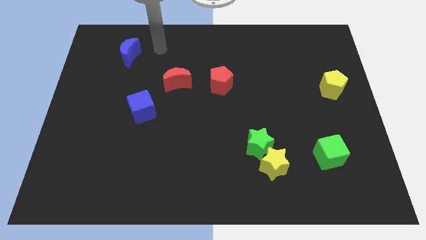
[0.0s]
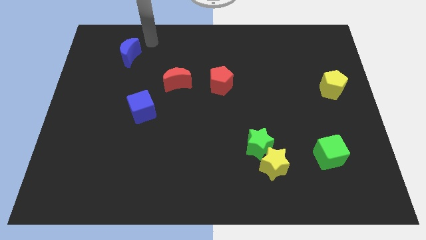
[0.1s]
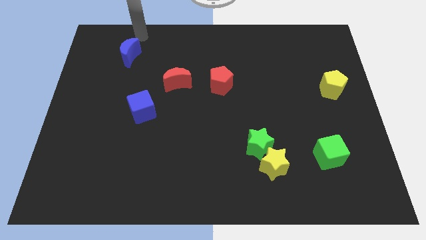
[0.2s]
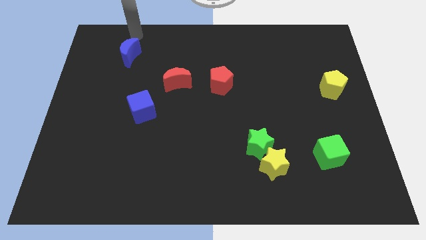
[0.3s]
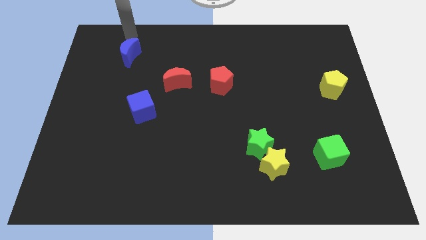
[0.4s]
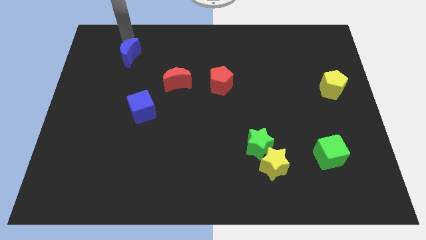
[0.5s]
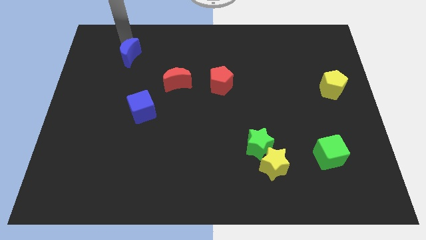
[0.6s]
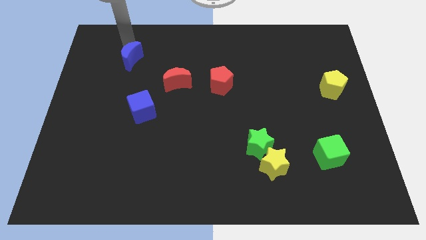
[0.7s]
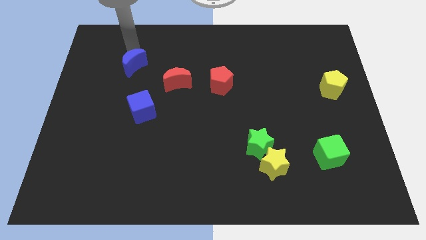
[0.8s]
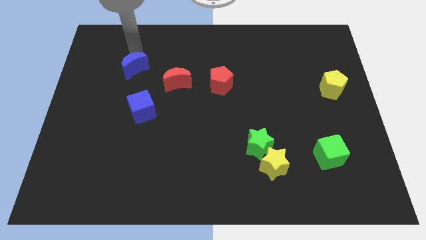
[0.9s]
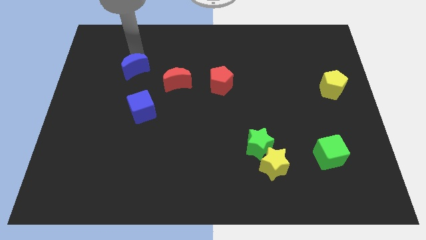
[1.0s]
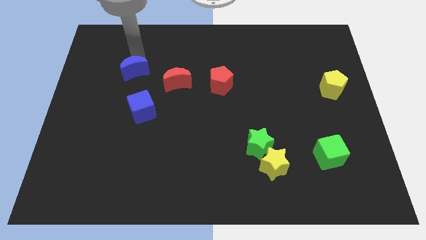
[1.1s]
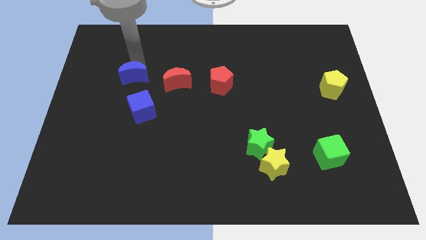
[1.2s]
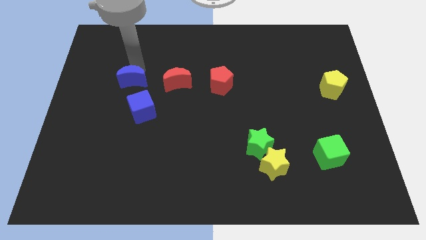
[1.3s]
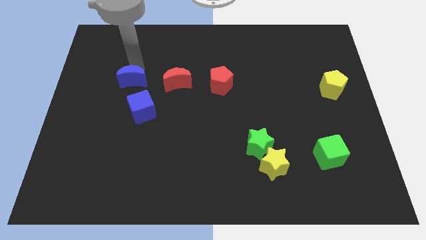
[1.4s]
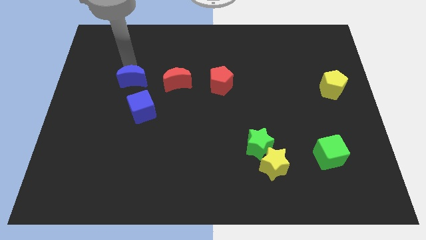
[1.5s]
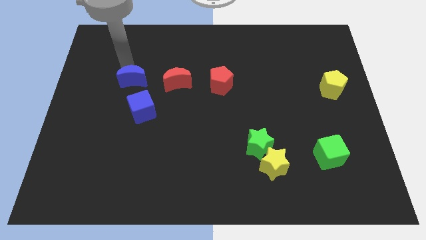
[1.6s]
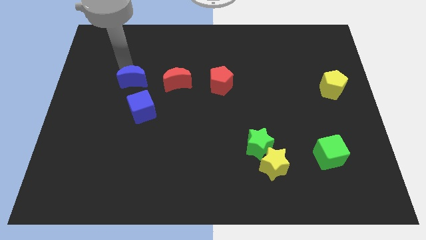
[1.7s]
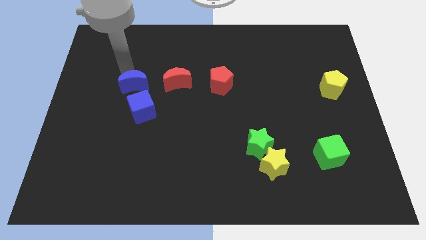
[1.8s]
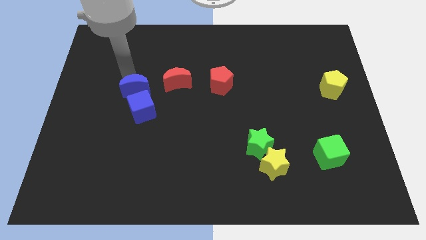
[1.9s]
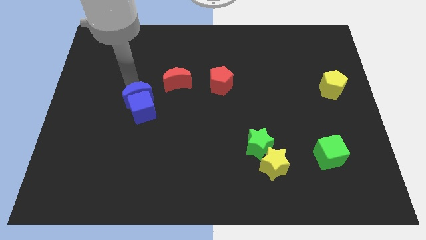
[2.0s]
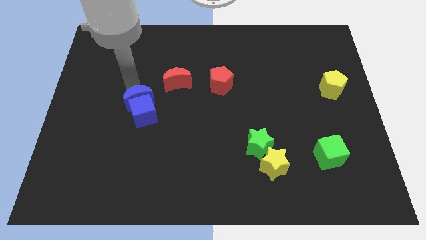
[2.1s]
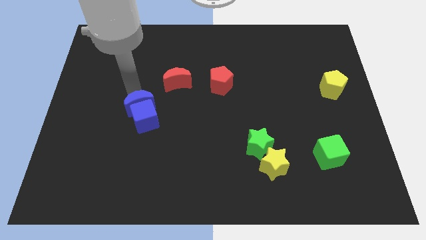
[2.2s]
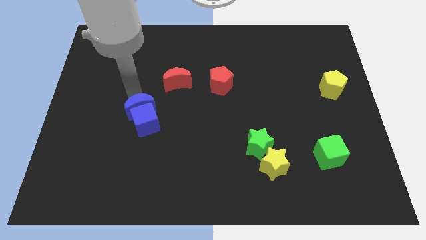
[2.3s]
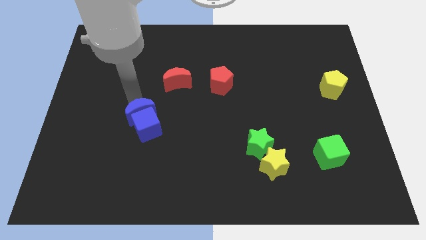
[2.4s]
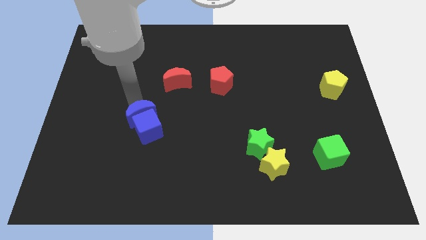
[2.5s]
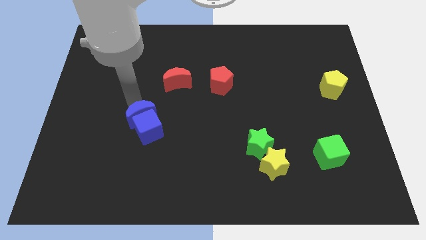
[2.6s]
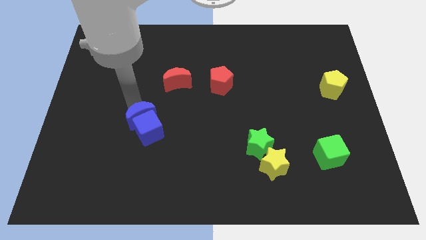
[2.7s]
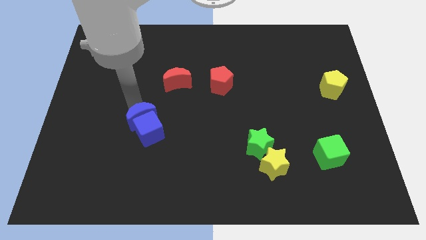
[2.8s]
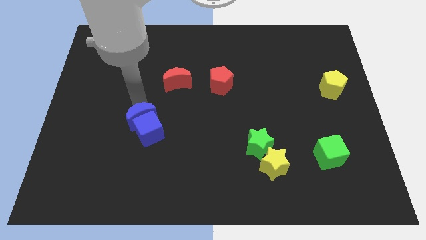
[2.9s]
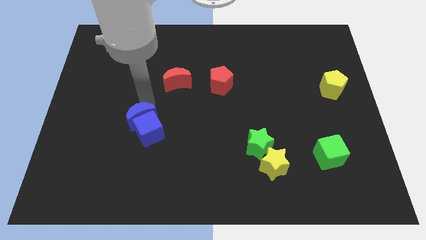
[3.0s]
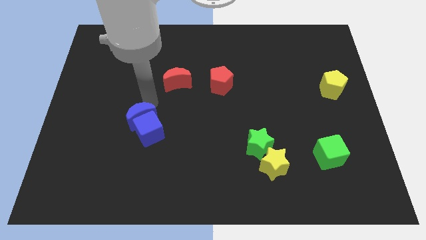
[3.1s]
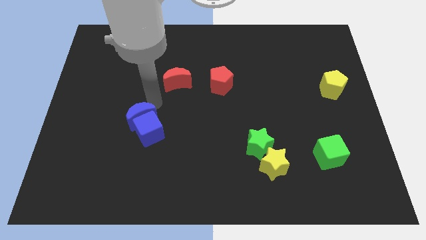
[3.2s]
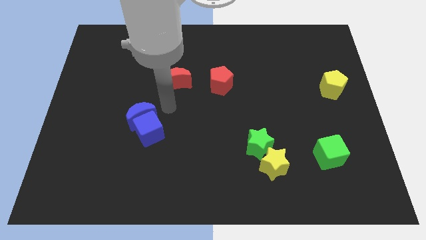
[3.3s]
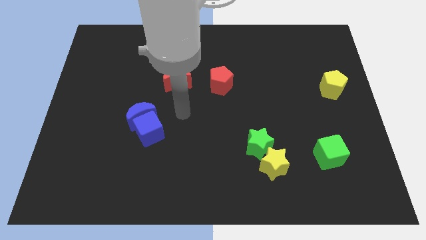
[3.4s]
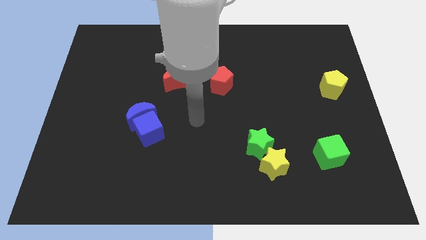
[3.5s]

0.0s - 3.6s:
push the blue moon into blue cube

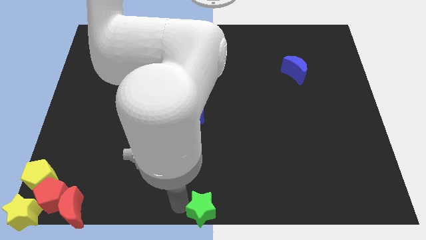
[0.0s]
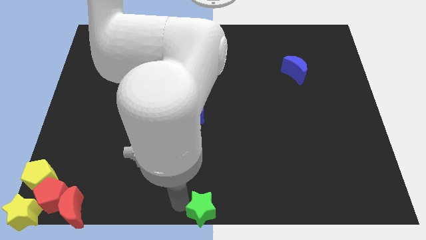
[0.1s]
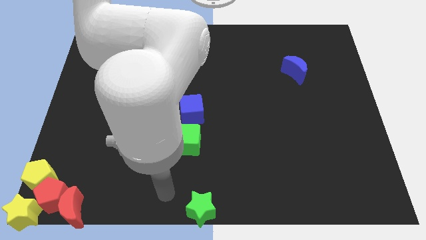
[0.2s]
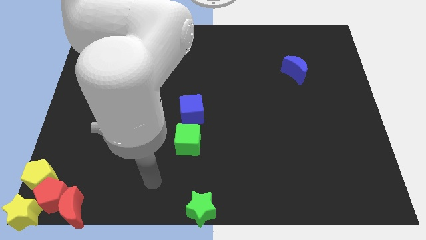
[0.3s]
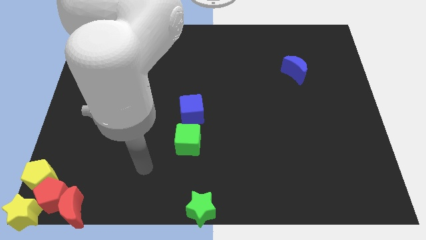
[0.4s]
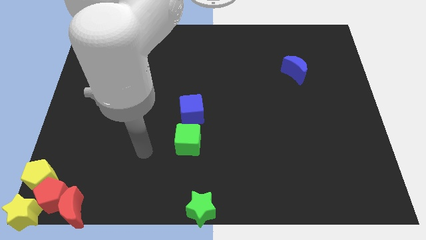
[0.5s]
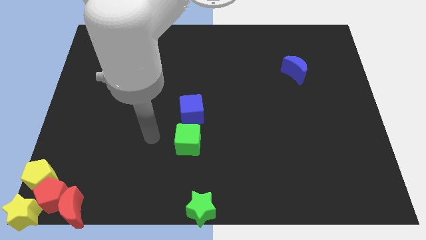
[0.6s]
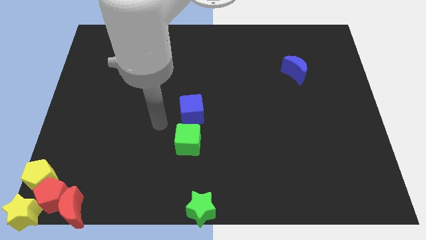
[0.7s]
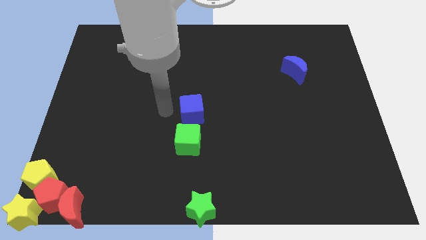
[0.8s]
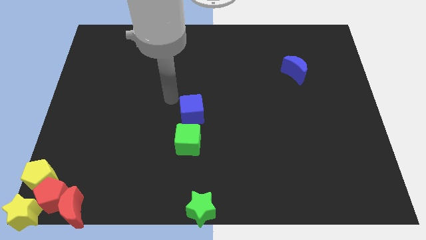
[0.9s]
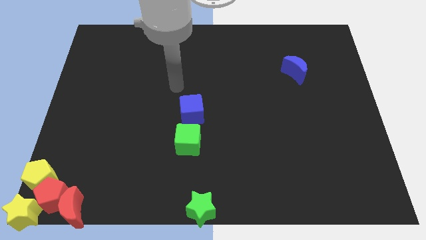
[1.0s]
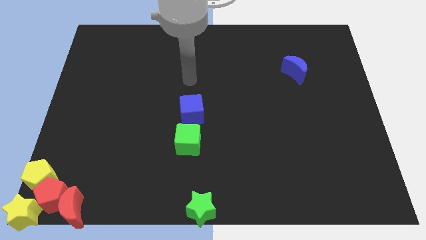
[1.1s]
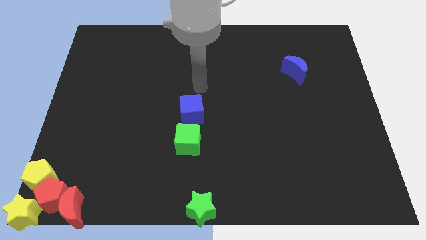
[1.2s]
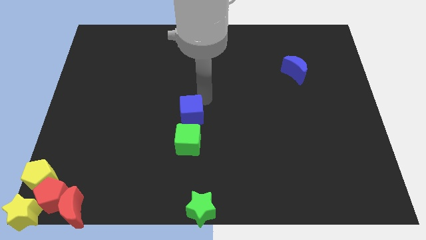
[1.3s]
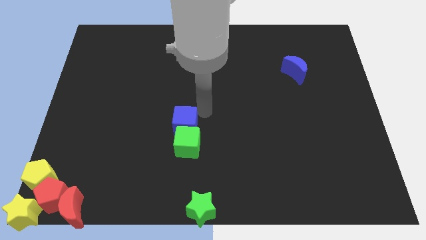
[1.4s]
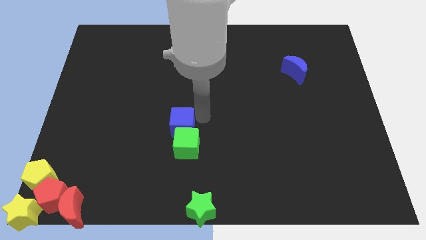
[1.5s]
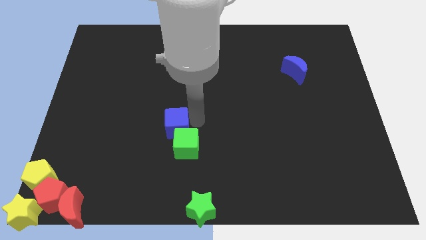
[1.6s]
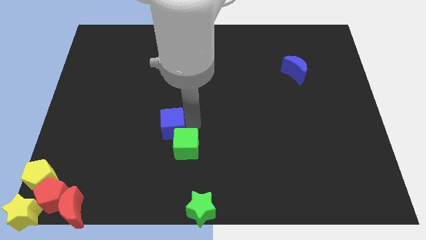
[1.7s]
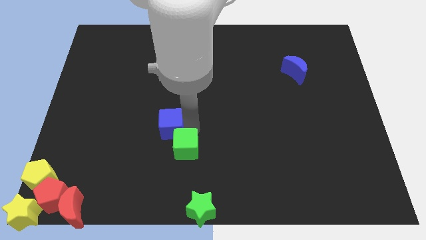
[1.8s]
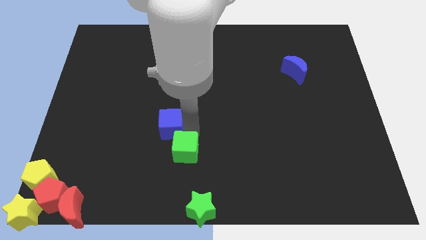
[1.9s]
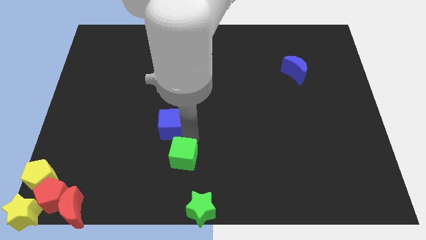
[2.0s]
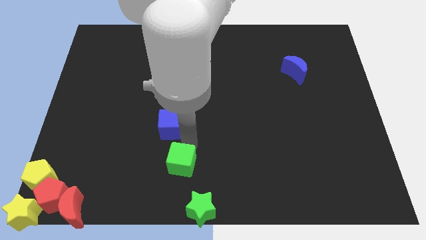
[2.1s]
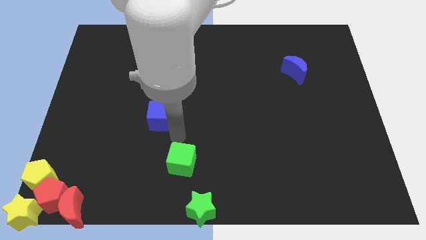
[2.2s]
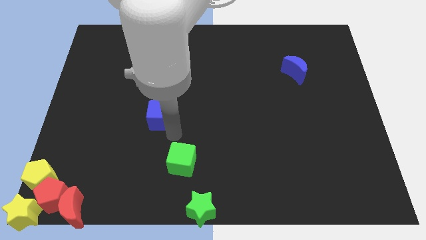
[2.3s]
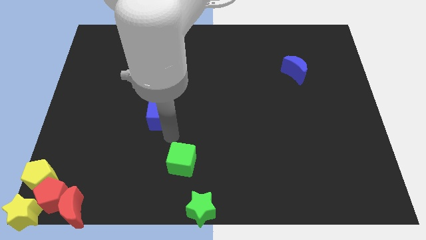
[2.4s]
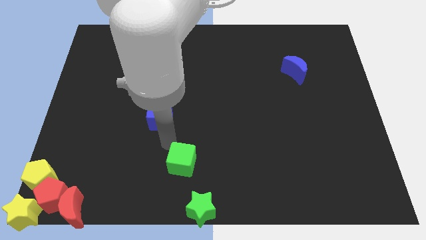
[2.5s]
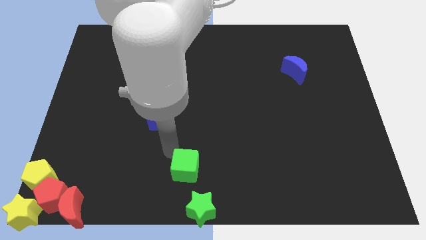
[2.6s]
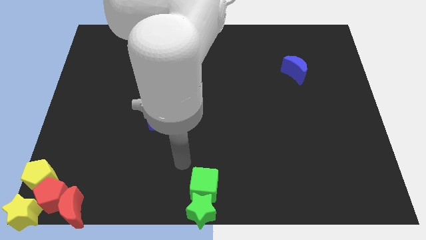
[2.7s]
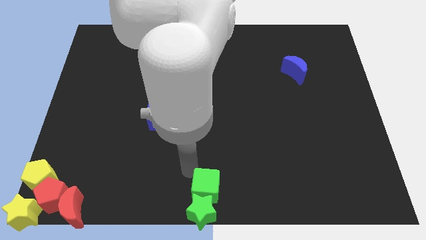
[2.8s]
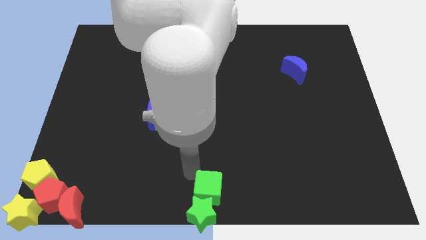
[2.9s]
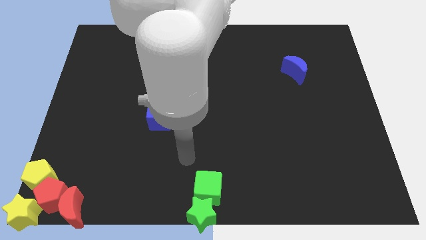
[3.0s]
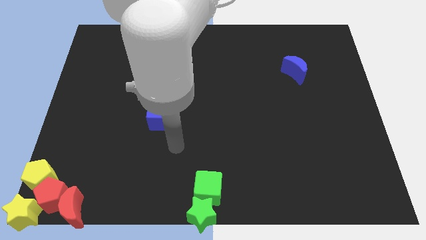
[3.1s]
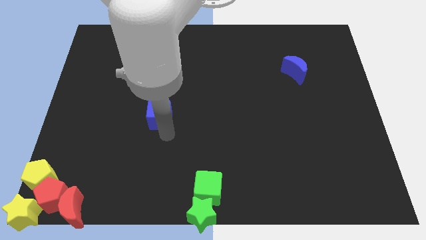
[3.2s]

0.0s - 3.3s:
separate the blue cube and green cube

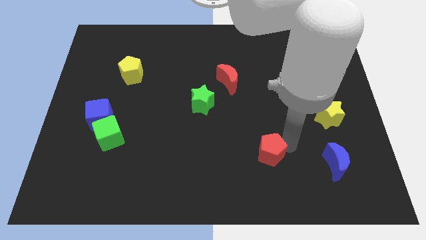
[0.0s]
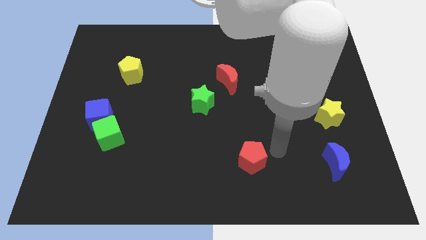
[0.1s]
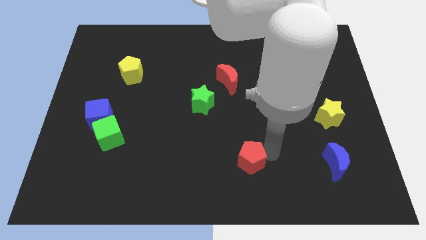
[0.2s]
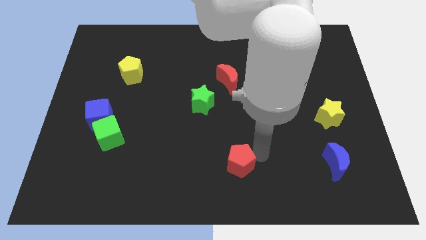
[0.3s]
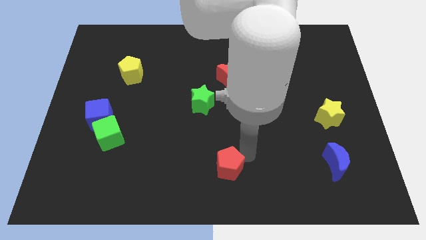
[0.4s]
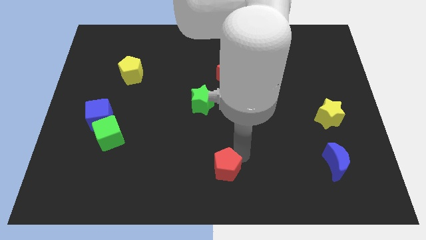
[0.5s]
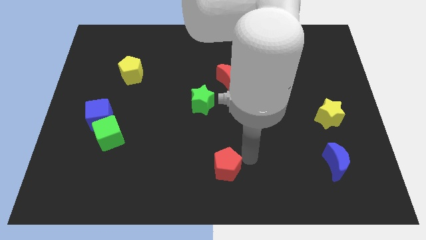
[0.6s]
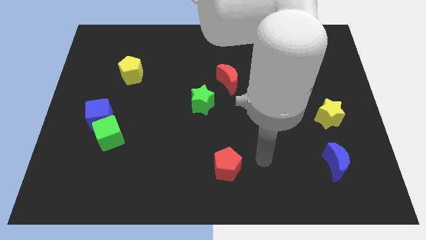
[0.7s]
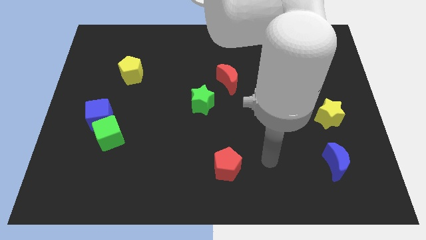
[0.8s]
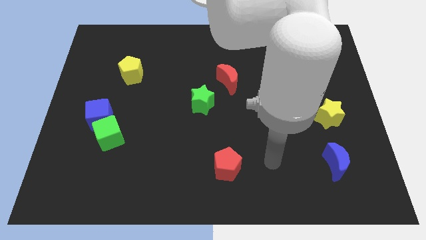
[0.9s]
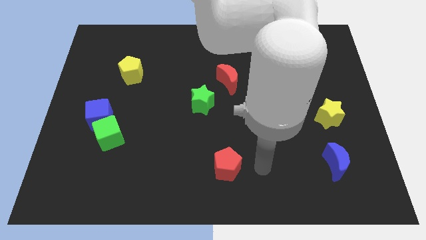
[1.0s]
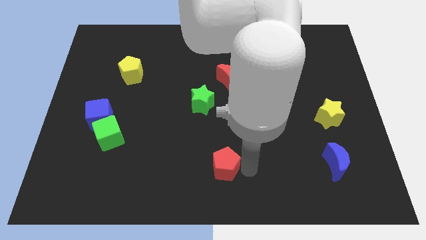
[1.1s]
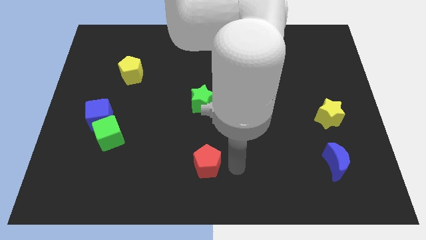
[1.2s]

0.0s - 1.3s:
move the red pentagon to the left

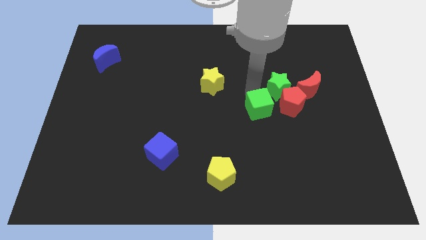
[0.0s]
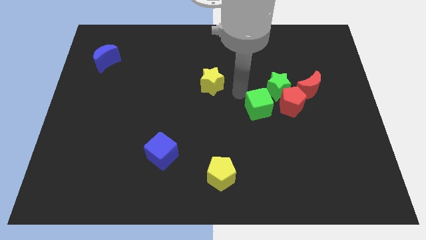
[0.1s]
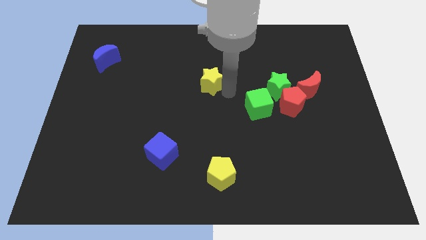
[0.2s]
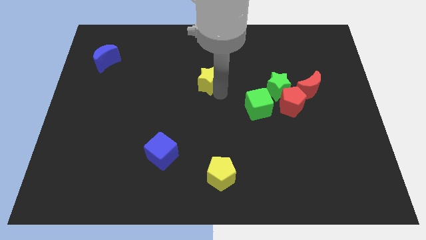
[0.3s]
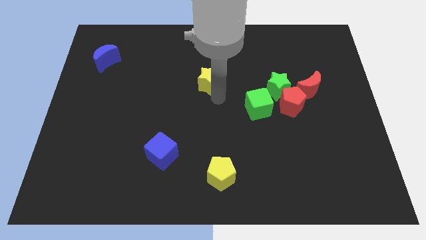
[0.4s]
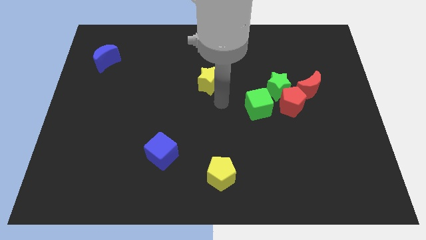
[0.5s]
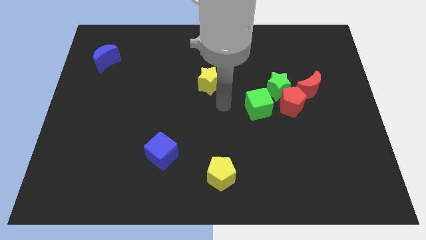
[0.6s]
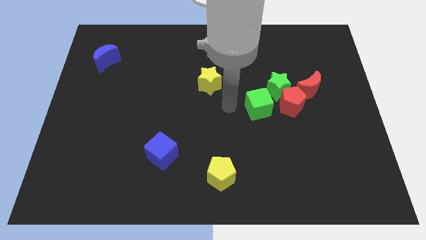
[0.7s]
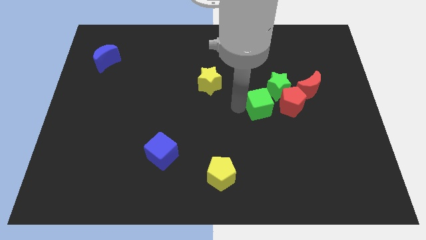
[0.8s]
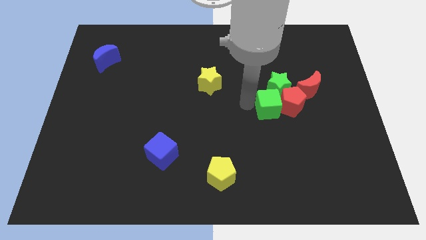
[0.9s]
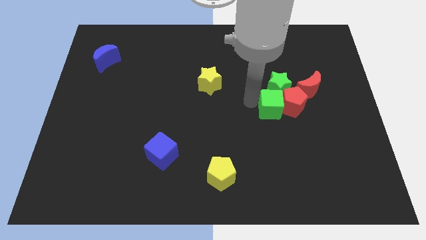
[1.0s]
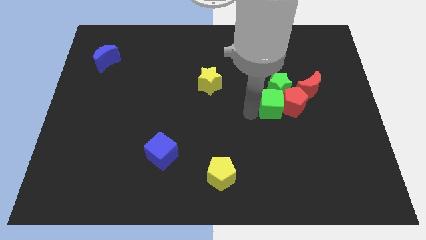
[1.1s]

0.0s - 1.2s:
push the green cube into the red pentagon and green star
